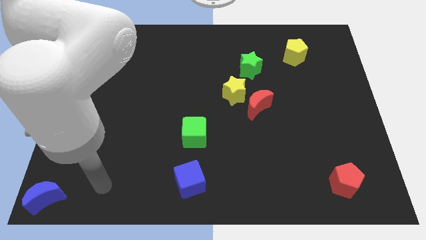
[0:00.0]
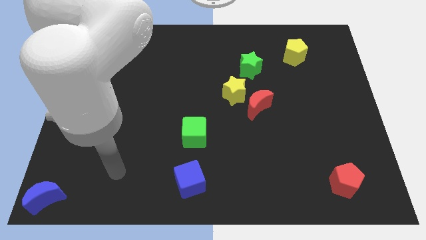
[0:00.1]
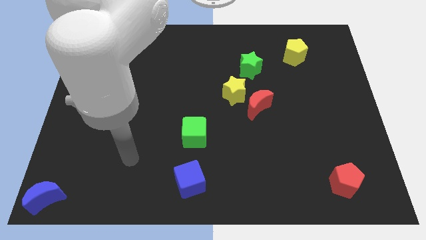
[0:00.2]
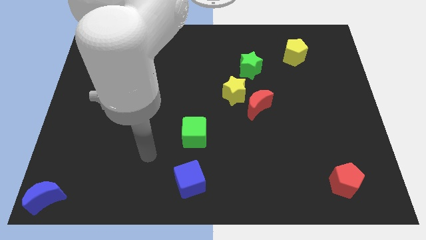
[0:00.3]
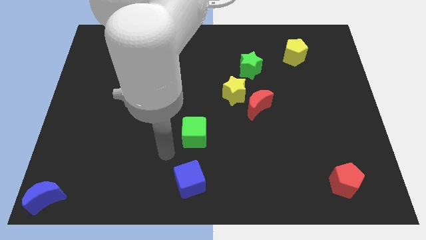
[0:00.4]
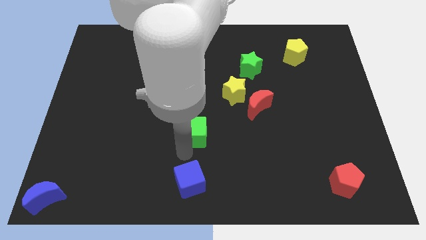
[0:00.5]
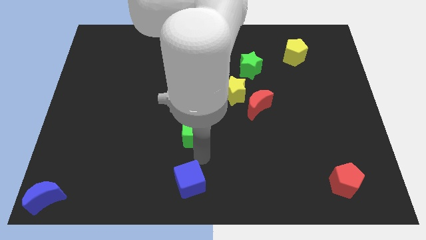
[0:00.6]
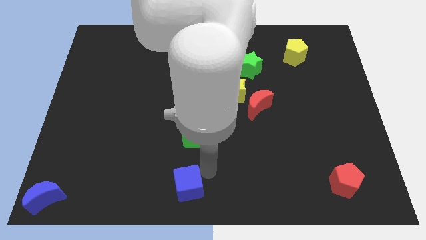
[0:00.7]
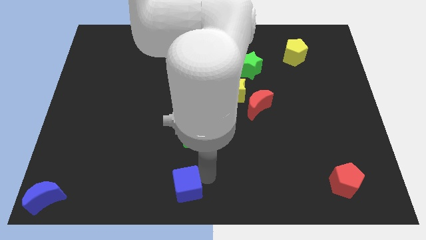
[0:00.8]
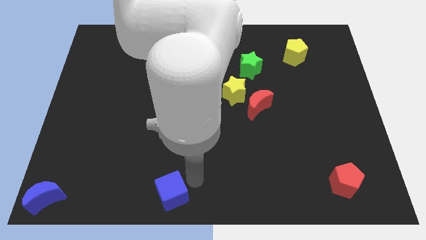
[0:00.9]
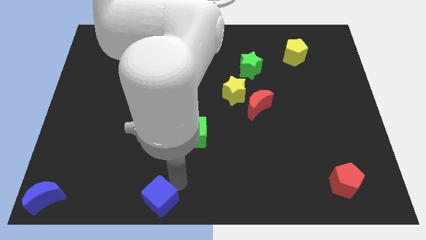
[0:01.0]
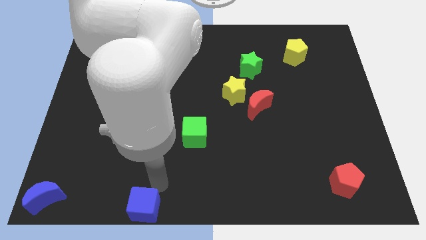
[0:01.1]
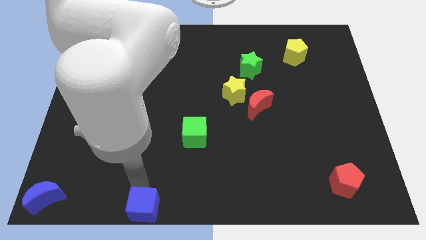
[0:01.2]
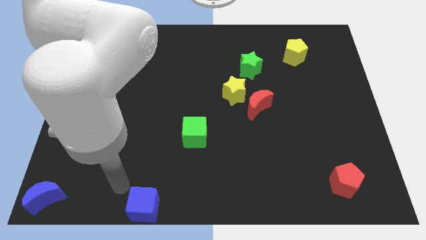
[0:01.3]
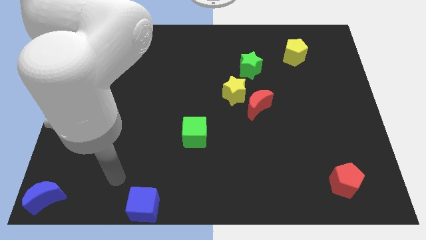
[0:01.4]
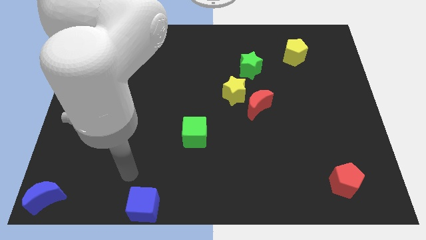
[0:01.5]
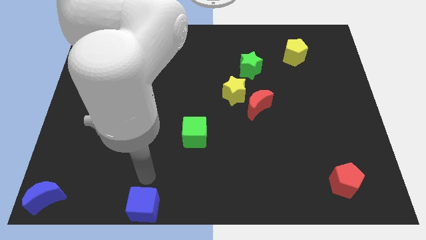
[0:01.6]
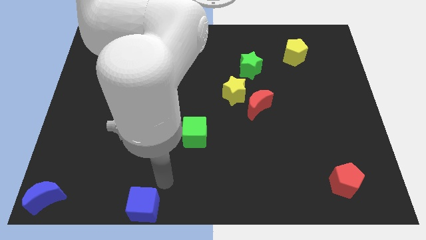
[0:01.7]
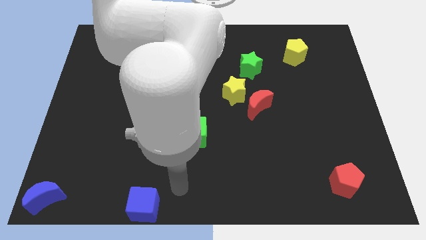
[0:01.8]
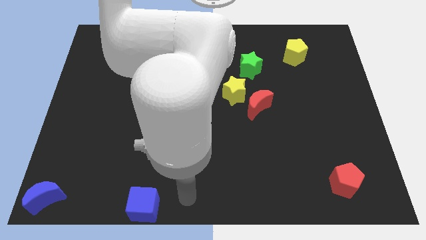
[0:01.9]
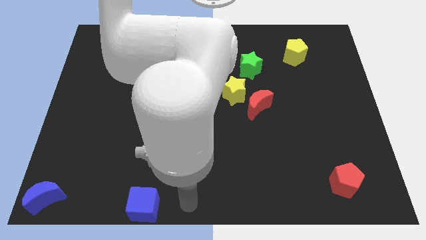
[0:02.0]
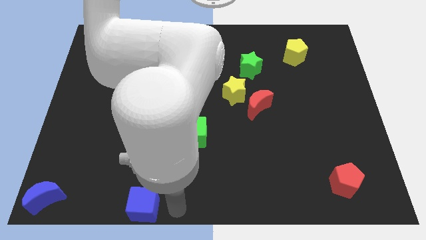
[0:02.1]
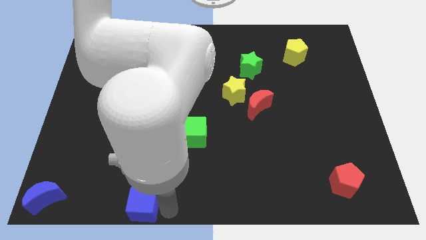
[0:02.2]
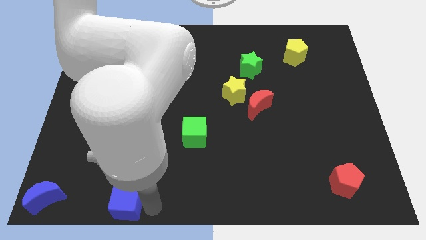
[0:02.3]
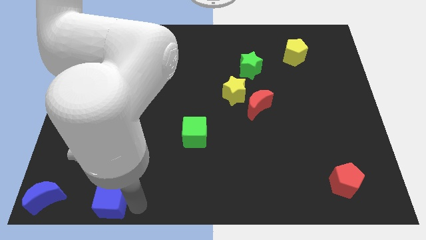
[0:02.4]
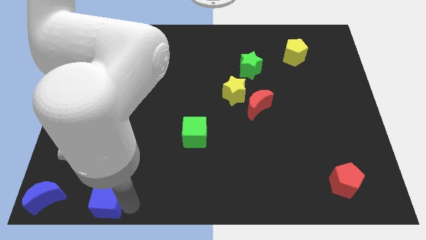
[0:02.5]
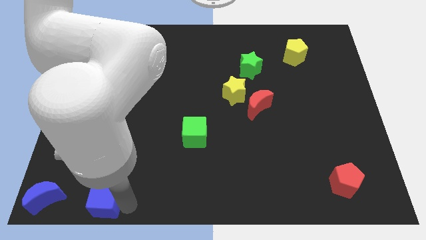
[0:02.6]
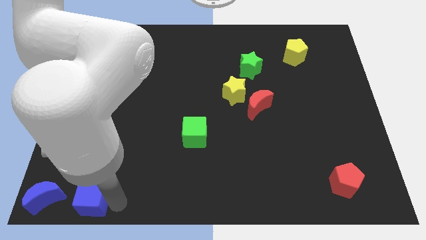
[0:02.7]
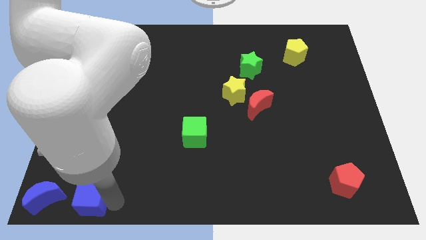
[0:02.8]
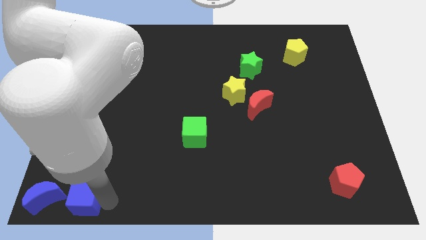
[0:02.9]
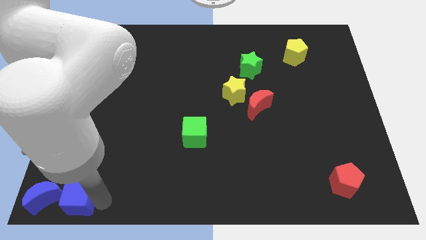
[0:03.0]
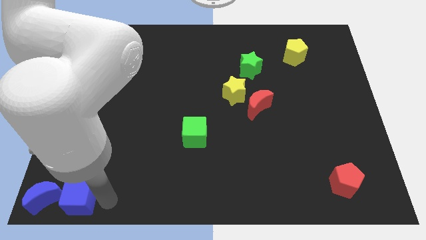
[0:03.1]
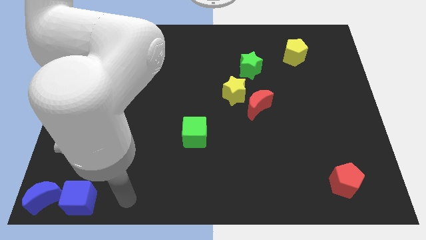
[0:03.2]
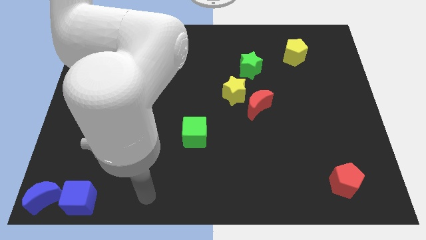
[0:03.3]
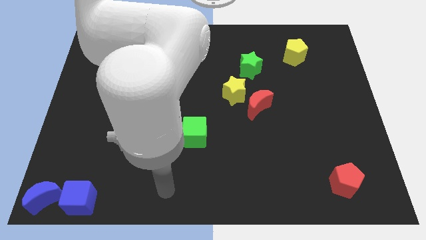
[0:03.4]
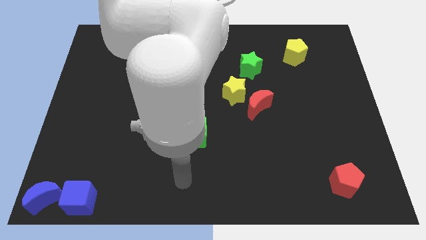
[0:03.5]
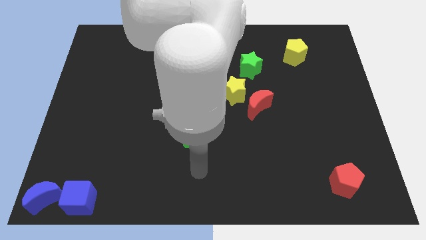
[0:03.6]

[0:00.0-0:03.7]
push the blue cube close to the blue crescent

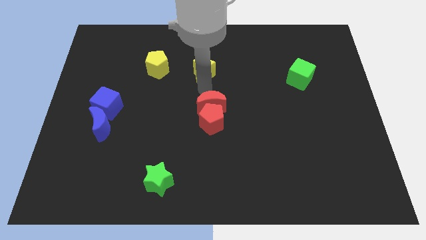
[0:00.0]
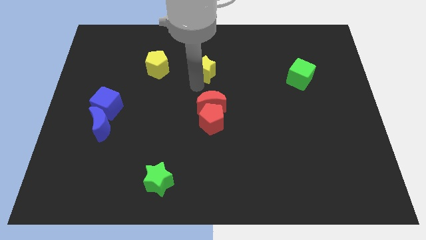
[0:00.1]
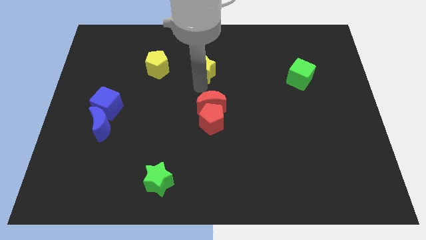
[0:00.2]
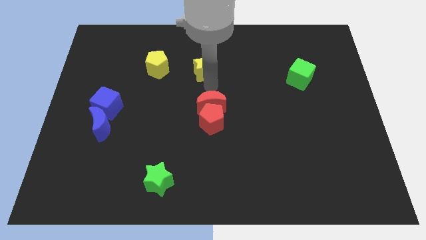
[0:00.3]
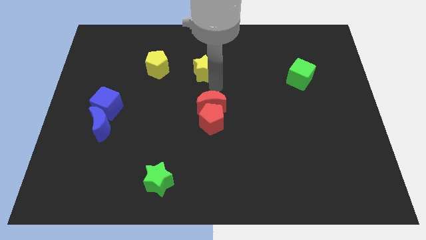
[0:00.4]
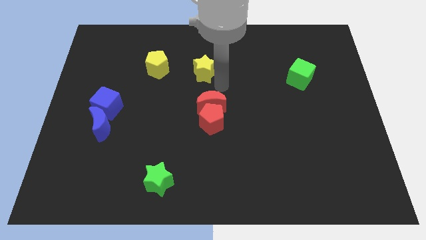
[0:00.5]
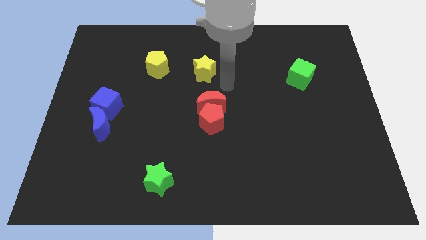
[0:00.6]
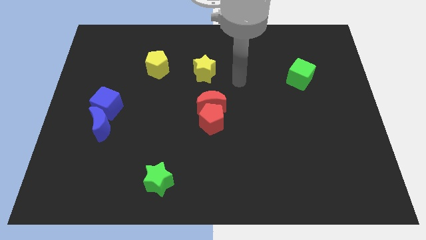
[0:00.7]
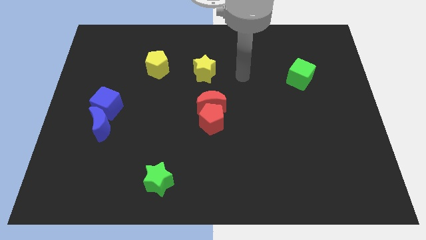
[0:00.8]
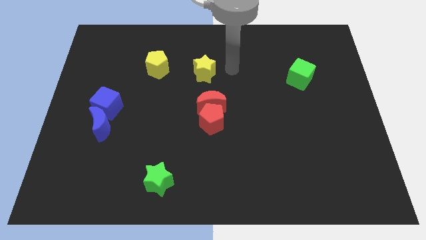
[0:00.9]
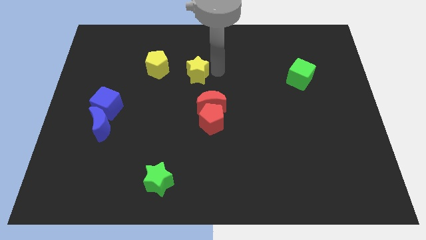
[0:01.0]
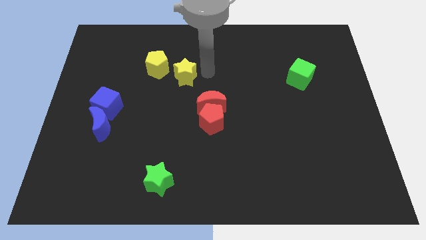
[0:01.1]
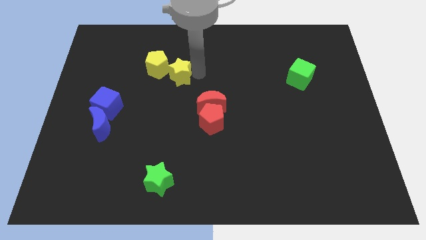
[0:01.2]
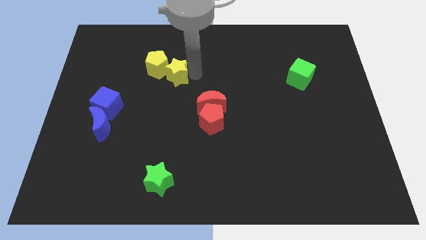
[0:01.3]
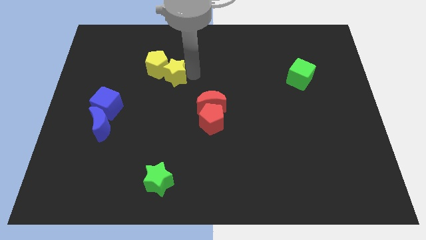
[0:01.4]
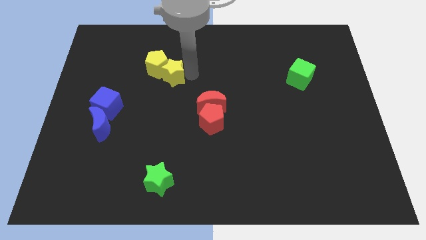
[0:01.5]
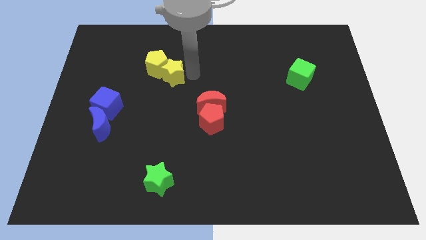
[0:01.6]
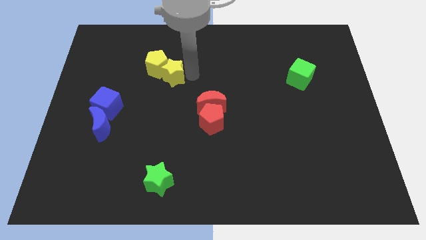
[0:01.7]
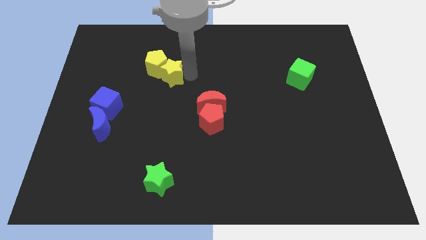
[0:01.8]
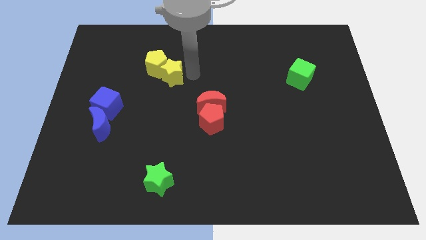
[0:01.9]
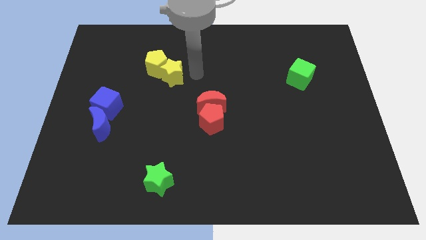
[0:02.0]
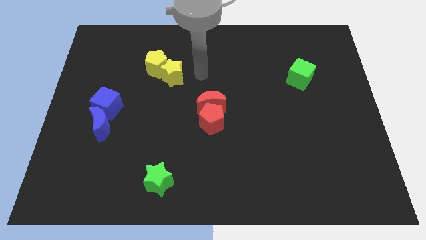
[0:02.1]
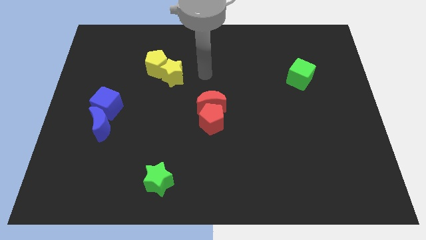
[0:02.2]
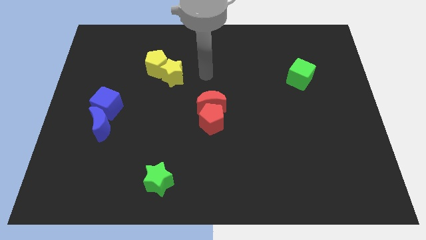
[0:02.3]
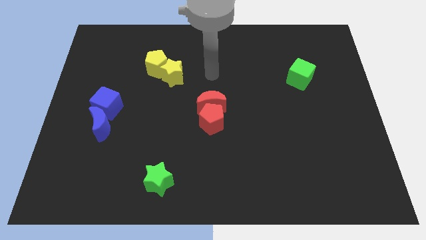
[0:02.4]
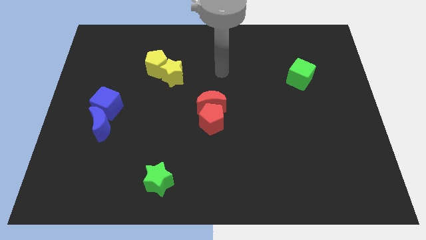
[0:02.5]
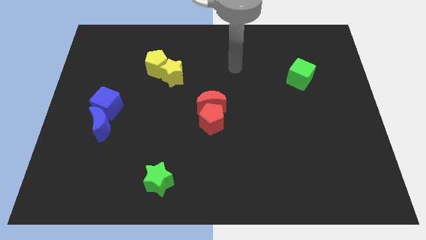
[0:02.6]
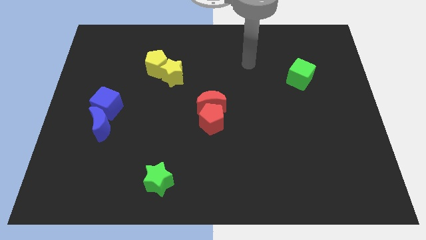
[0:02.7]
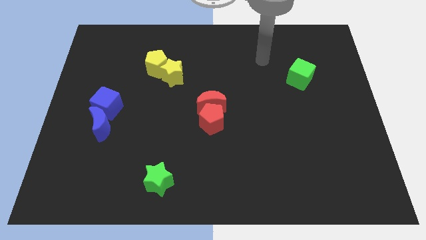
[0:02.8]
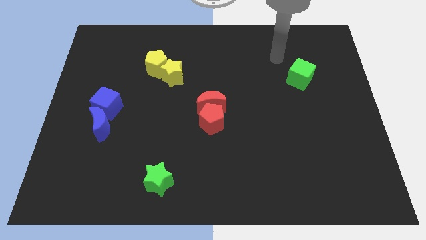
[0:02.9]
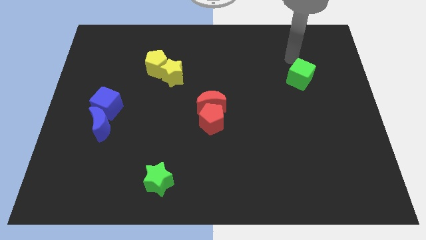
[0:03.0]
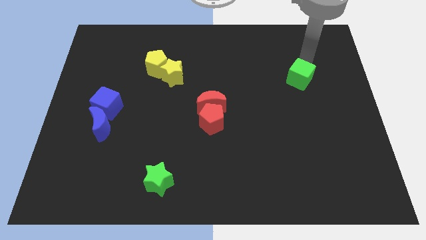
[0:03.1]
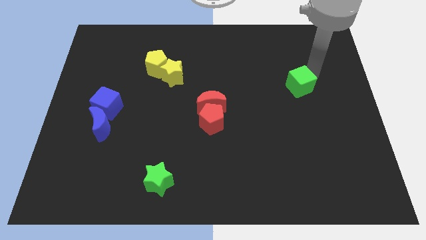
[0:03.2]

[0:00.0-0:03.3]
push the yellow star into the yellow pentagon

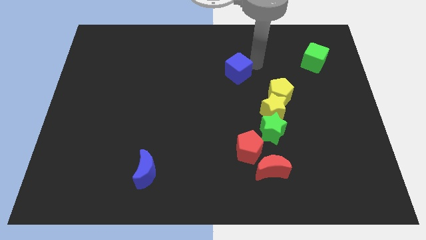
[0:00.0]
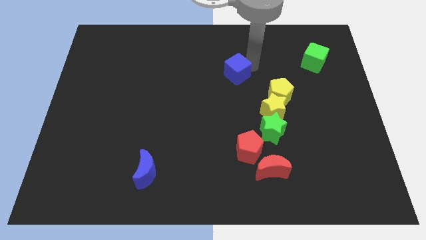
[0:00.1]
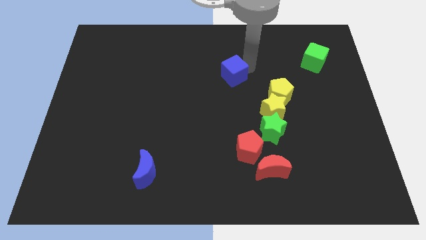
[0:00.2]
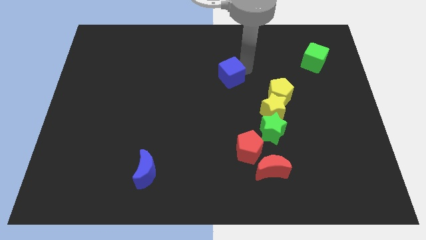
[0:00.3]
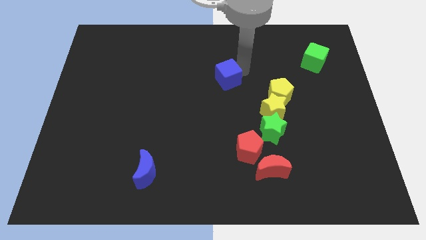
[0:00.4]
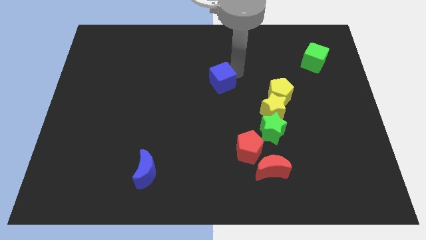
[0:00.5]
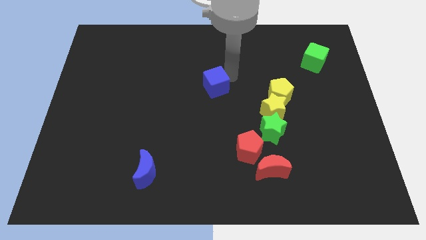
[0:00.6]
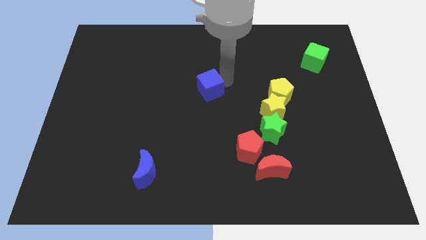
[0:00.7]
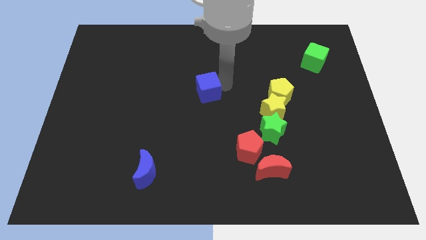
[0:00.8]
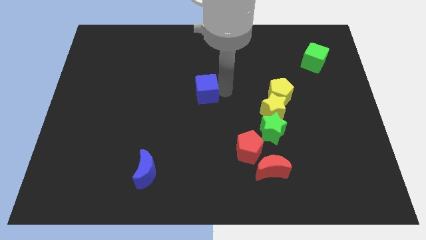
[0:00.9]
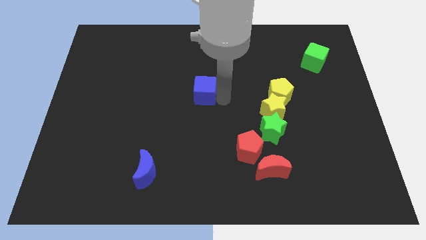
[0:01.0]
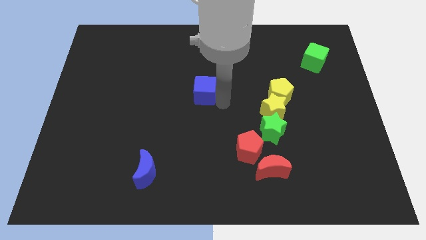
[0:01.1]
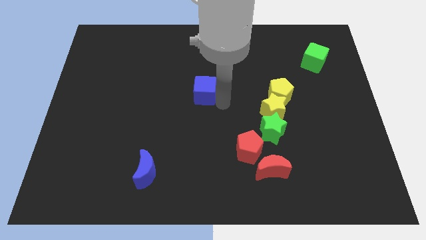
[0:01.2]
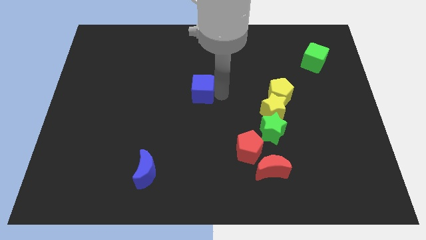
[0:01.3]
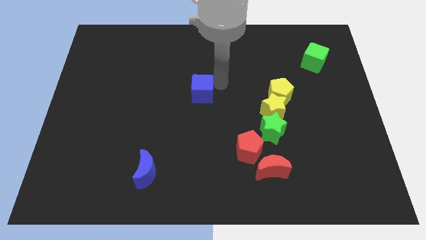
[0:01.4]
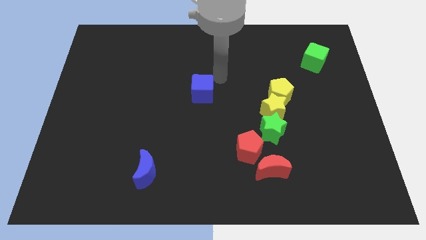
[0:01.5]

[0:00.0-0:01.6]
move the blue cube to the center of the board

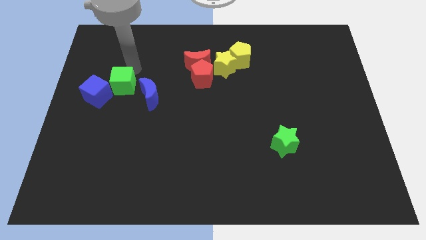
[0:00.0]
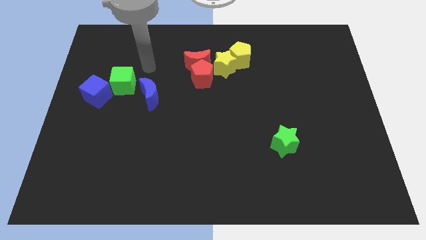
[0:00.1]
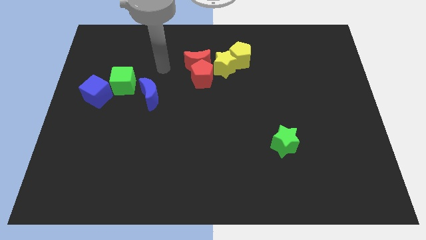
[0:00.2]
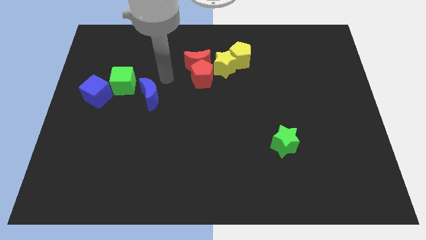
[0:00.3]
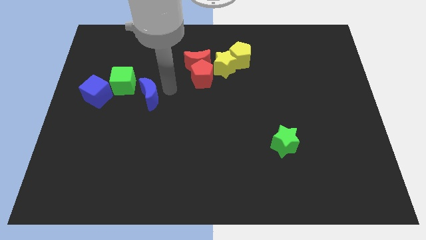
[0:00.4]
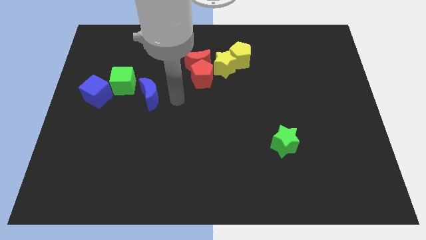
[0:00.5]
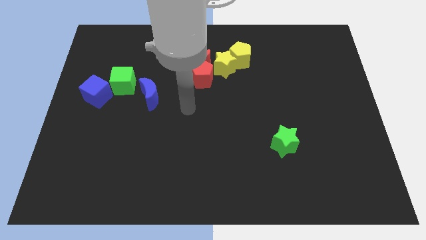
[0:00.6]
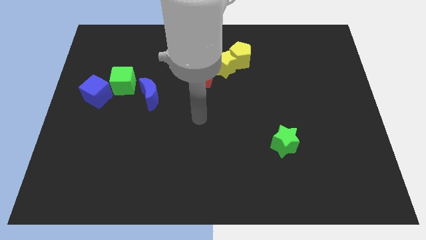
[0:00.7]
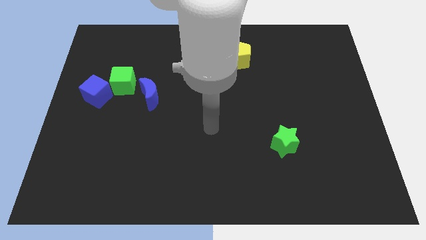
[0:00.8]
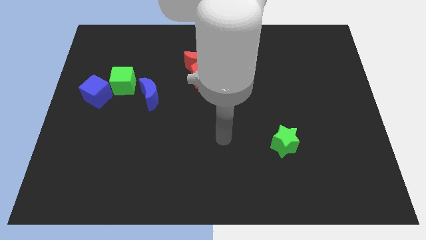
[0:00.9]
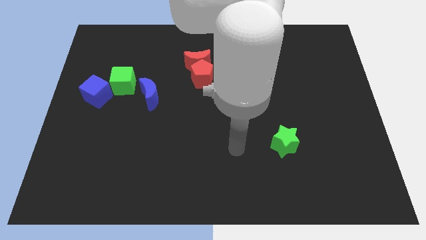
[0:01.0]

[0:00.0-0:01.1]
move your arm away from green cube
